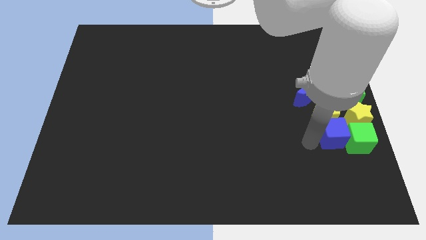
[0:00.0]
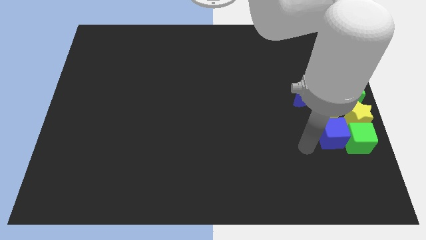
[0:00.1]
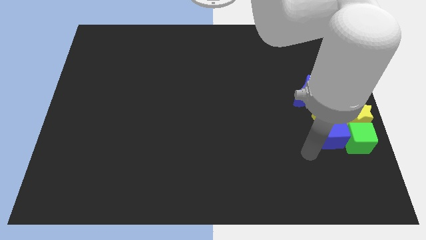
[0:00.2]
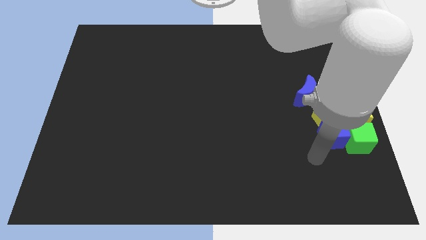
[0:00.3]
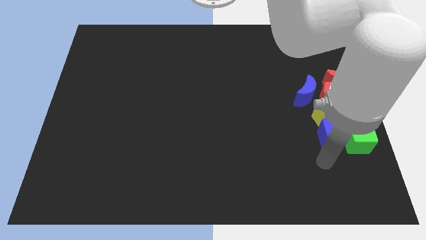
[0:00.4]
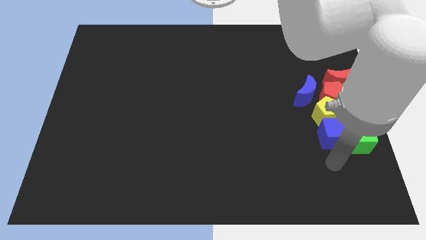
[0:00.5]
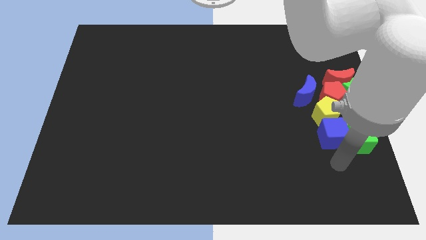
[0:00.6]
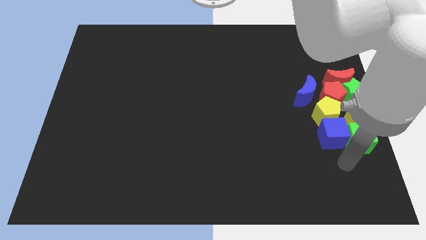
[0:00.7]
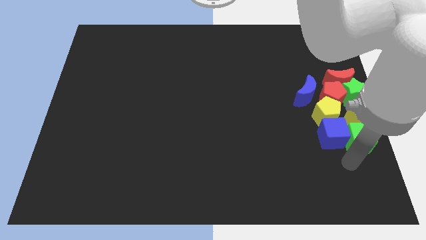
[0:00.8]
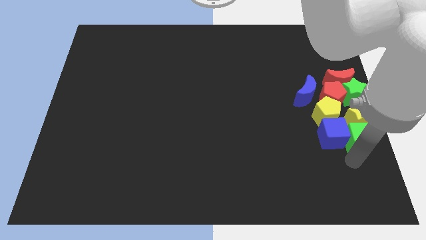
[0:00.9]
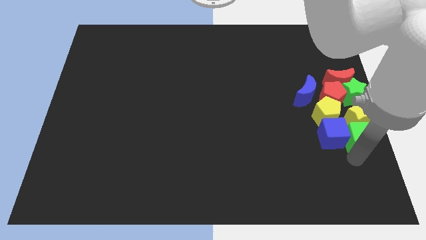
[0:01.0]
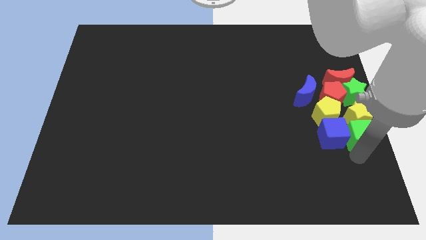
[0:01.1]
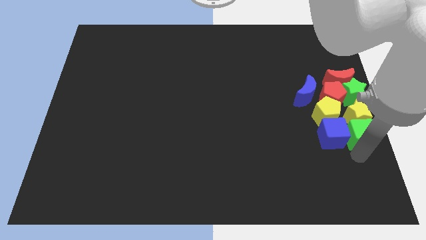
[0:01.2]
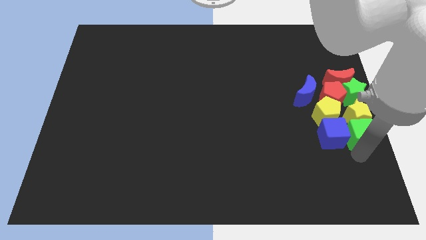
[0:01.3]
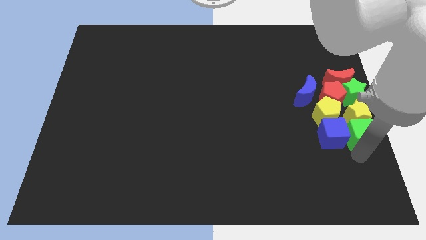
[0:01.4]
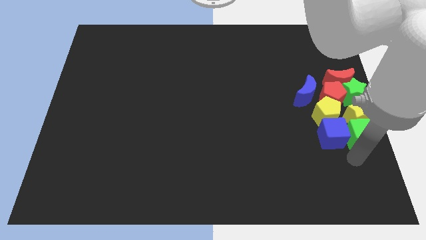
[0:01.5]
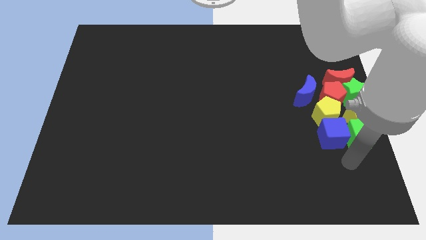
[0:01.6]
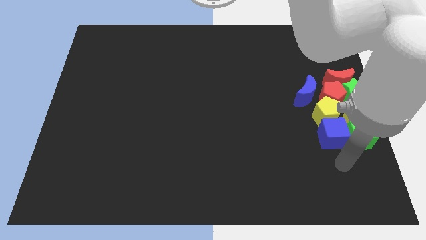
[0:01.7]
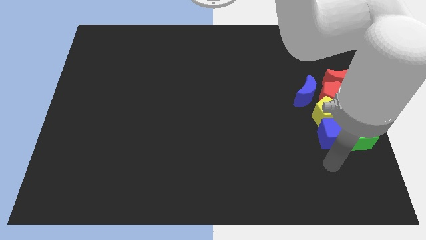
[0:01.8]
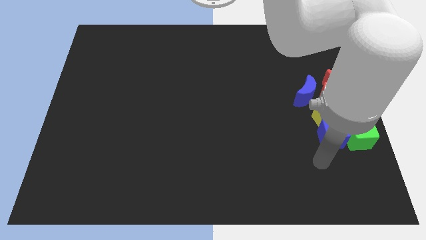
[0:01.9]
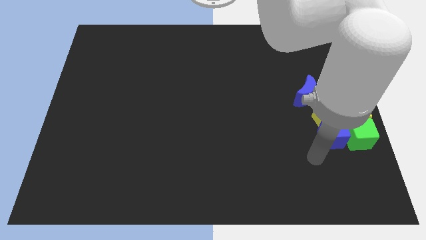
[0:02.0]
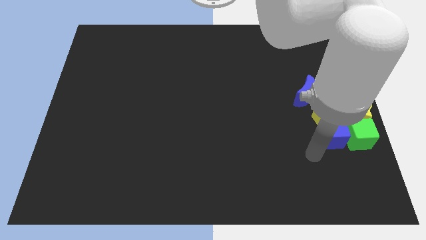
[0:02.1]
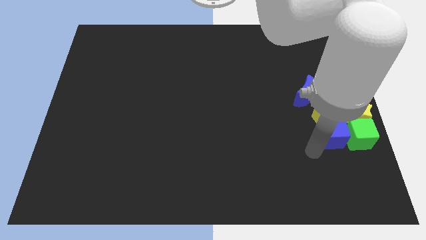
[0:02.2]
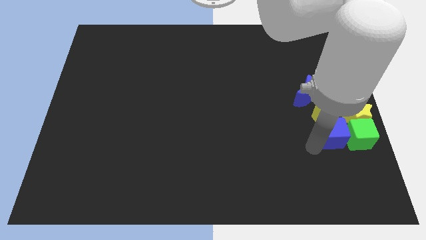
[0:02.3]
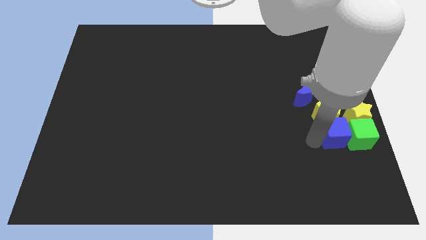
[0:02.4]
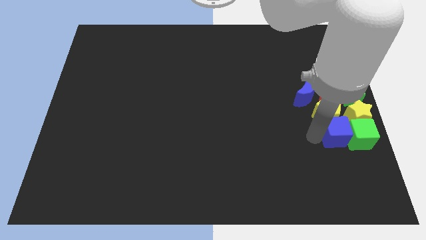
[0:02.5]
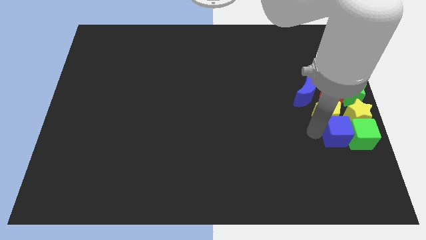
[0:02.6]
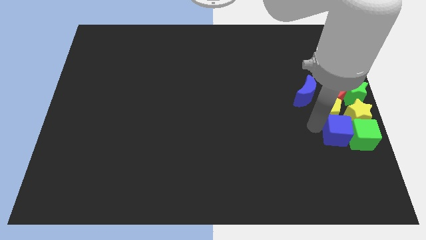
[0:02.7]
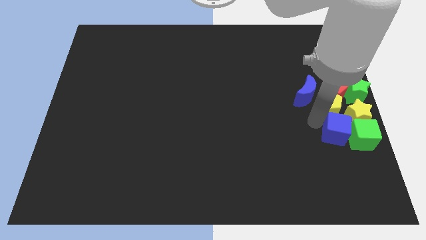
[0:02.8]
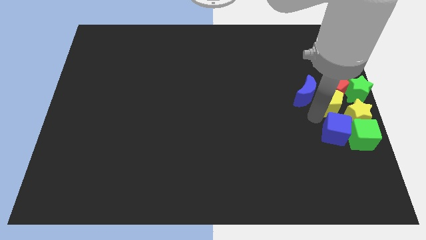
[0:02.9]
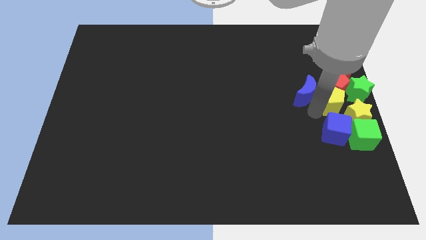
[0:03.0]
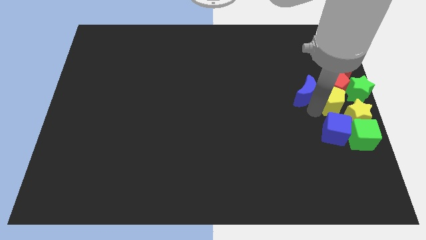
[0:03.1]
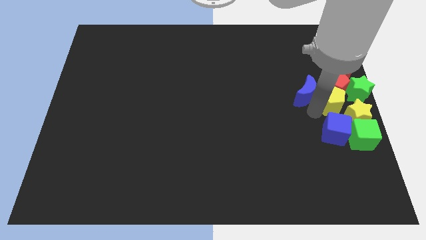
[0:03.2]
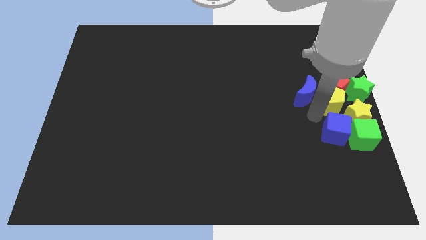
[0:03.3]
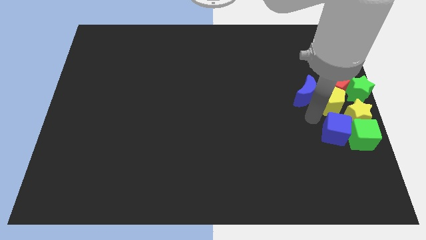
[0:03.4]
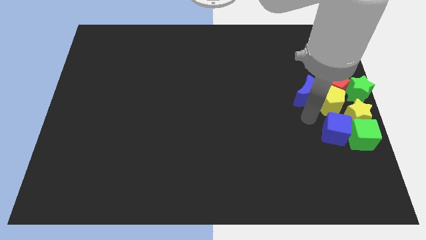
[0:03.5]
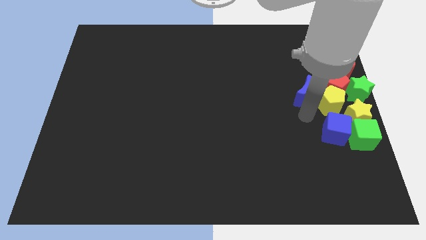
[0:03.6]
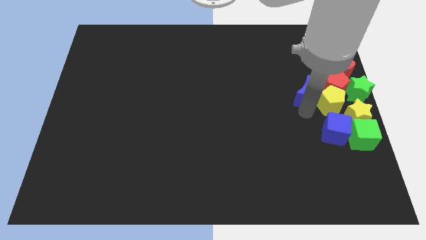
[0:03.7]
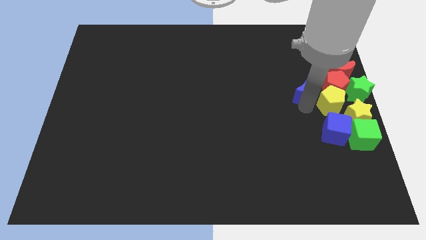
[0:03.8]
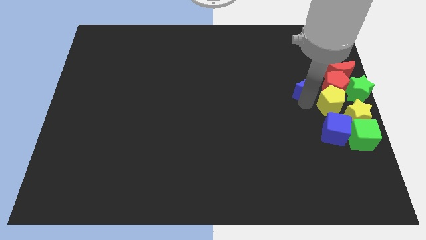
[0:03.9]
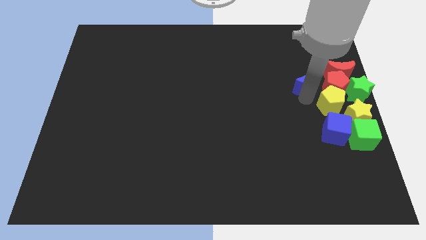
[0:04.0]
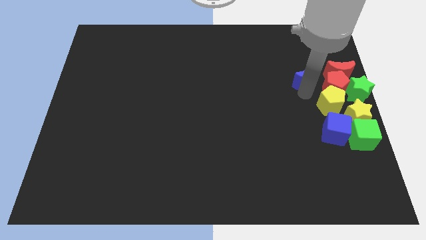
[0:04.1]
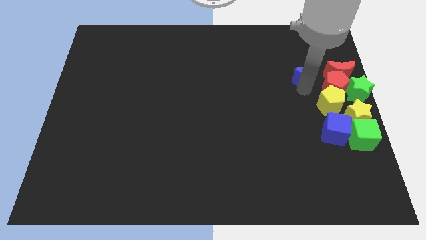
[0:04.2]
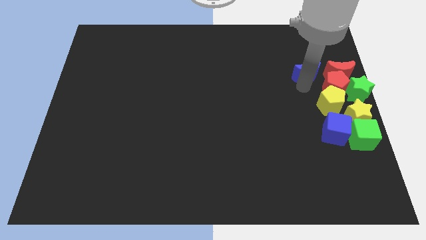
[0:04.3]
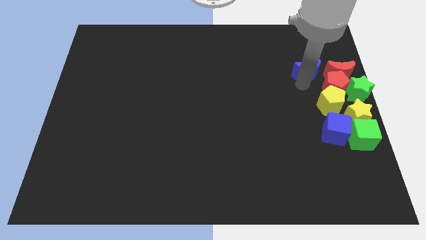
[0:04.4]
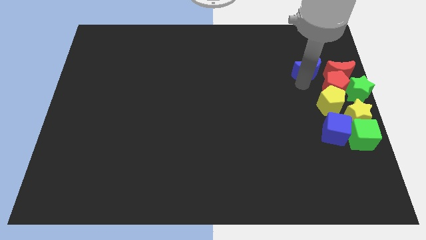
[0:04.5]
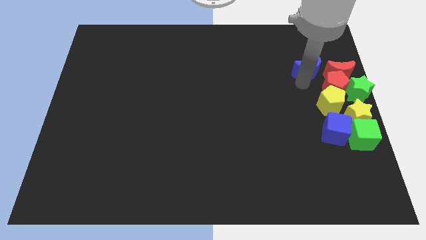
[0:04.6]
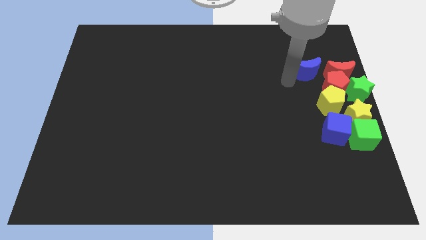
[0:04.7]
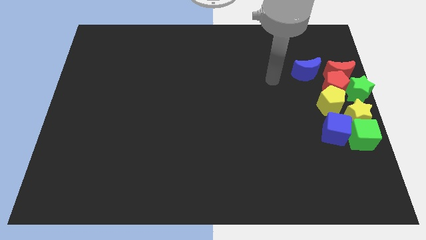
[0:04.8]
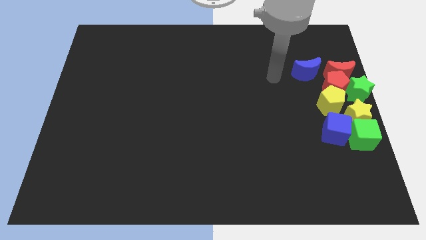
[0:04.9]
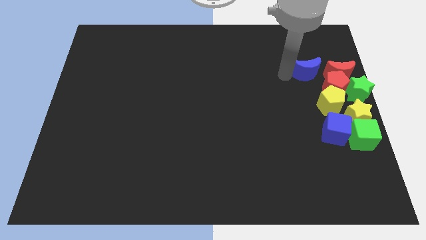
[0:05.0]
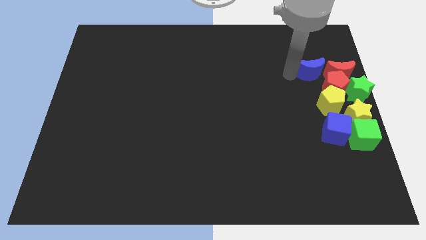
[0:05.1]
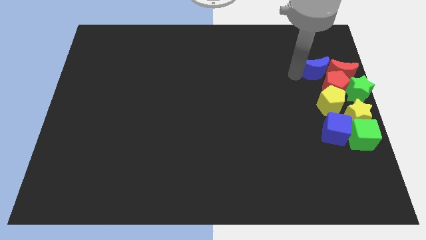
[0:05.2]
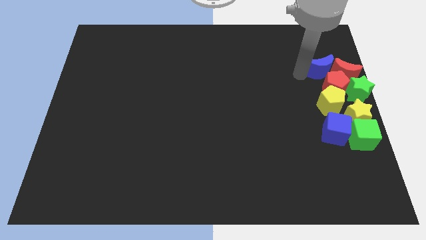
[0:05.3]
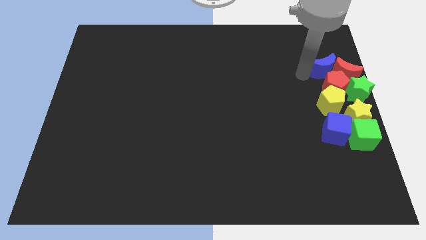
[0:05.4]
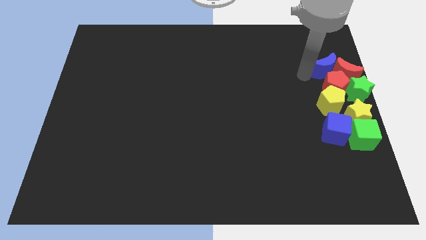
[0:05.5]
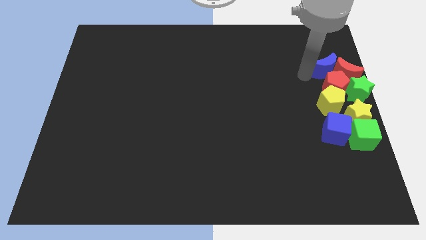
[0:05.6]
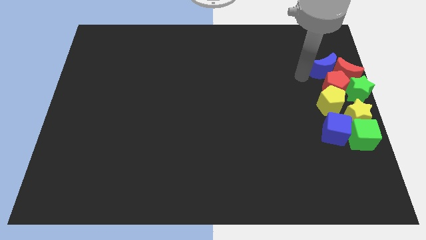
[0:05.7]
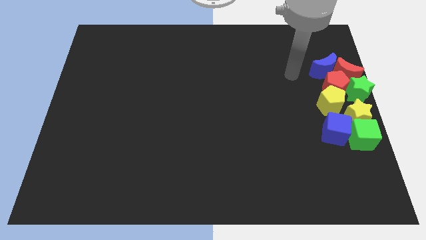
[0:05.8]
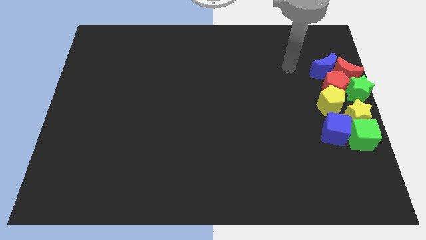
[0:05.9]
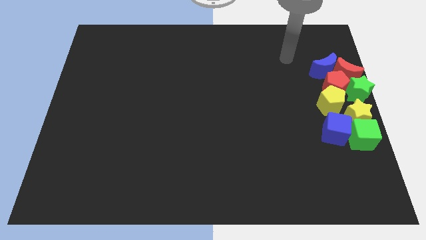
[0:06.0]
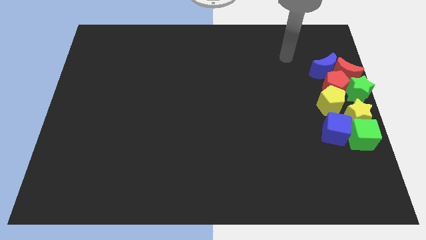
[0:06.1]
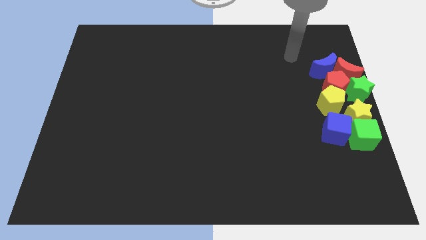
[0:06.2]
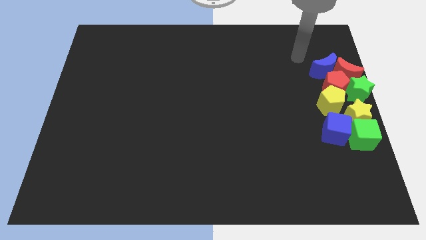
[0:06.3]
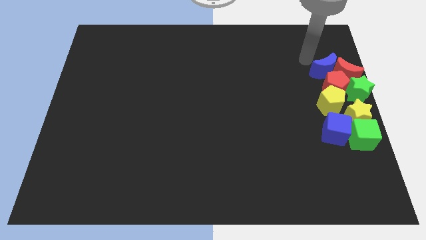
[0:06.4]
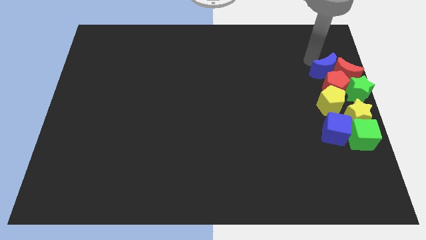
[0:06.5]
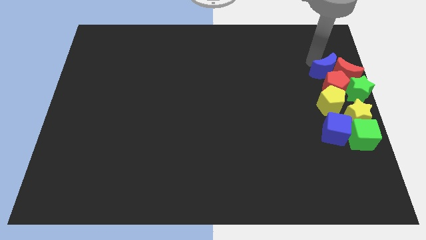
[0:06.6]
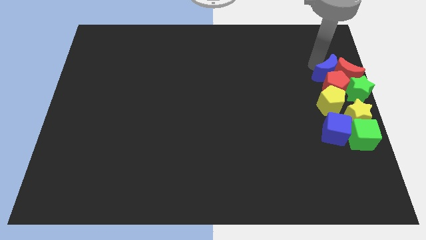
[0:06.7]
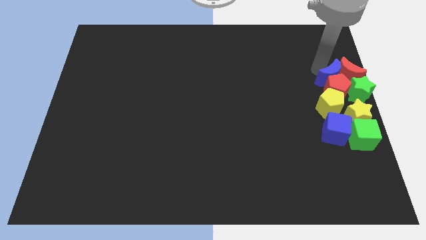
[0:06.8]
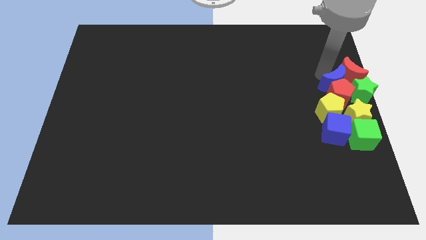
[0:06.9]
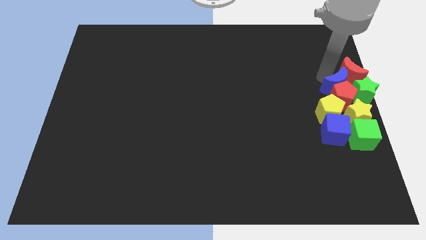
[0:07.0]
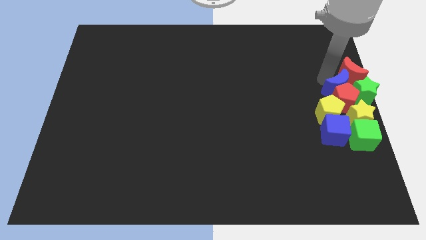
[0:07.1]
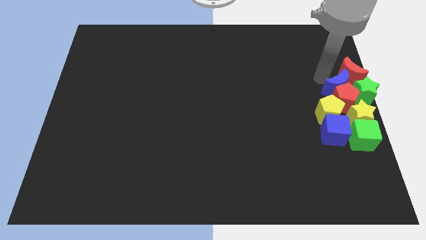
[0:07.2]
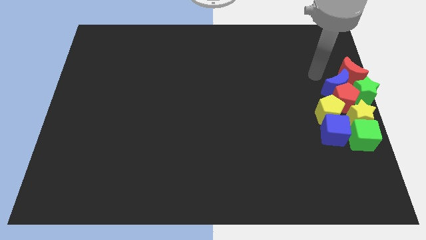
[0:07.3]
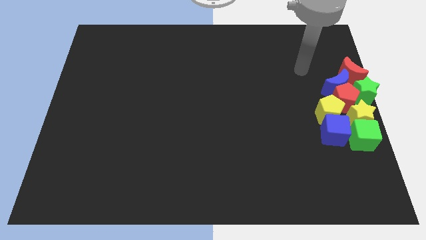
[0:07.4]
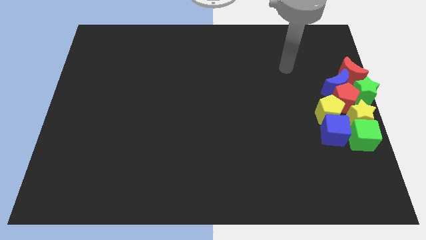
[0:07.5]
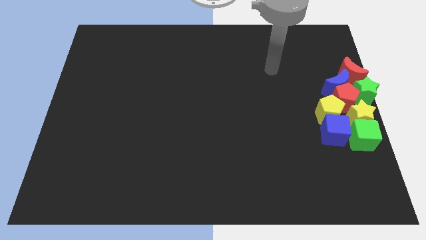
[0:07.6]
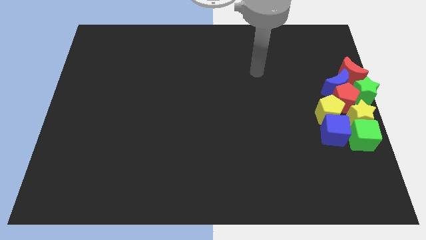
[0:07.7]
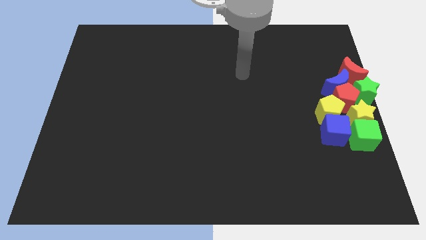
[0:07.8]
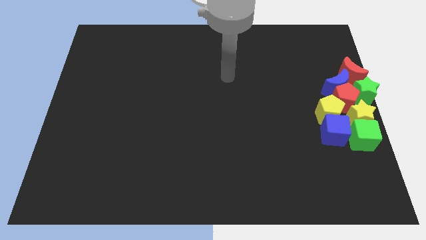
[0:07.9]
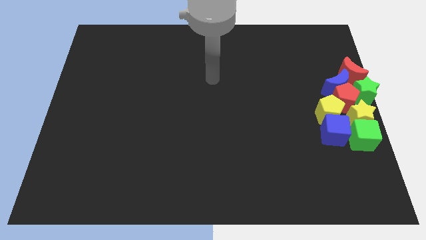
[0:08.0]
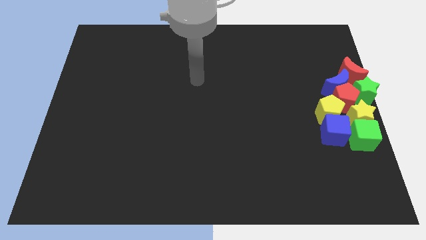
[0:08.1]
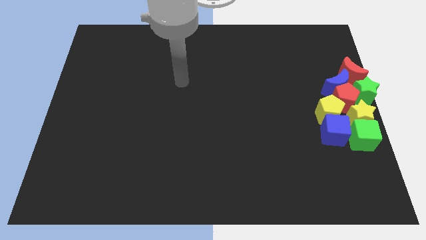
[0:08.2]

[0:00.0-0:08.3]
adjust the blocks towards the center right of the board

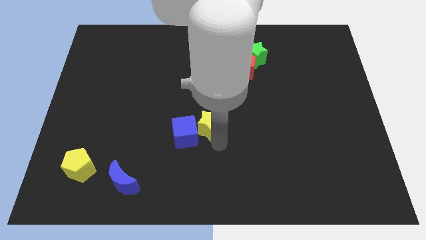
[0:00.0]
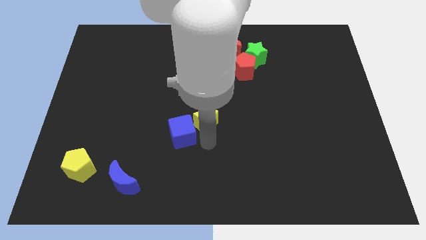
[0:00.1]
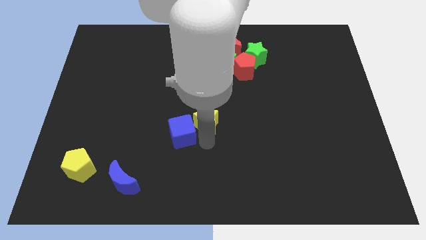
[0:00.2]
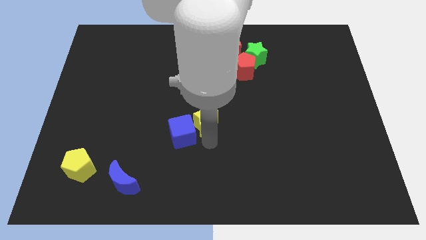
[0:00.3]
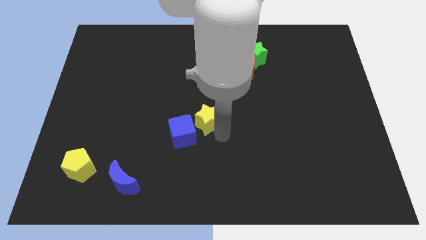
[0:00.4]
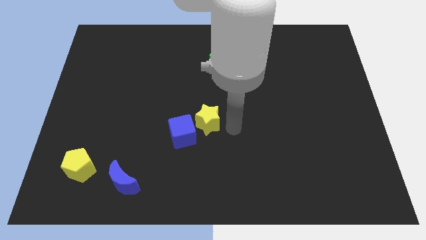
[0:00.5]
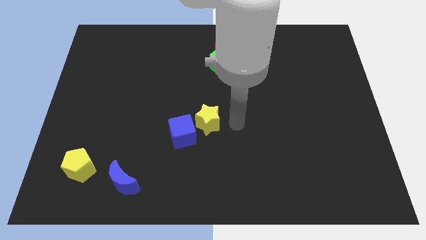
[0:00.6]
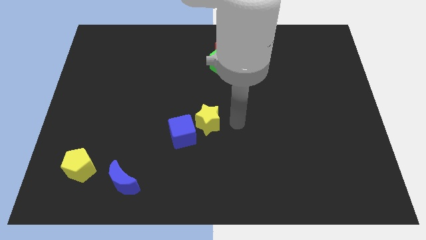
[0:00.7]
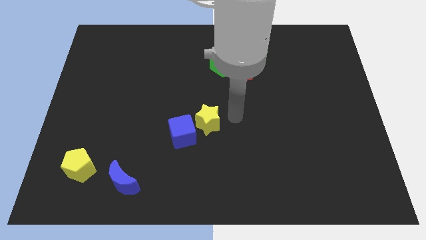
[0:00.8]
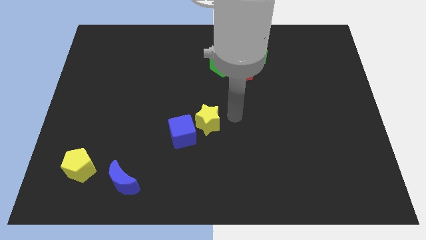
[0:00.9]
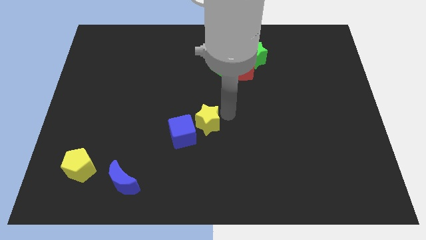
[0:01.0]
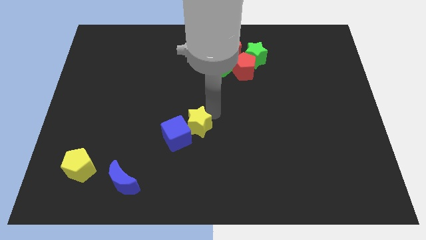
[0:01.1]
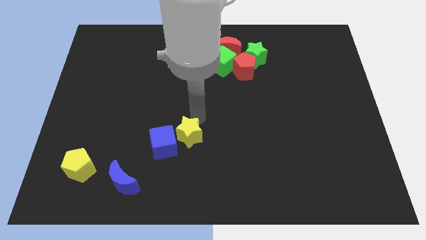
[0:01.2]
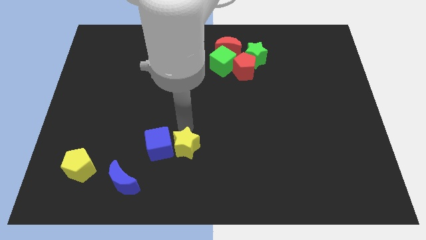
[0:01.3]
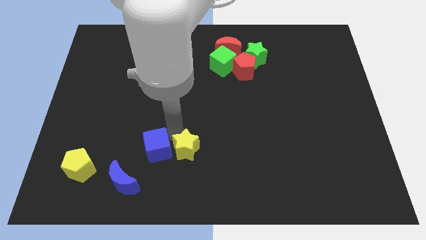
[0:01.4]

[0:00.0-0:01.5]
separate blue cube and yellow star
